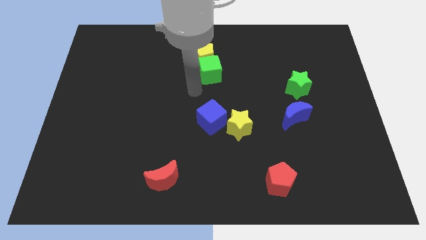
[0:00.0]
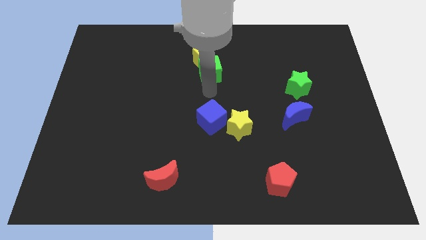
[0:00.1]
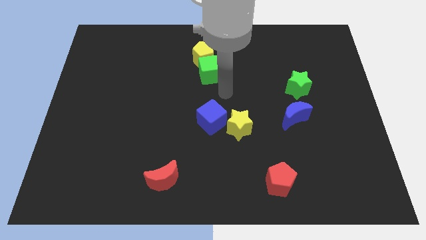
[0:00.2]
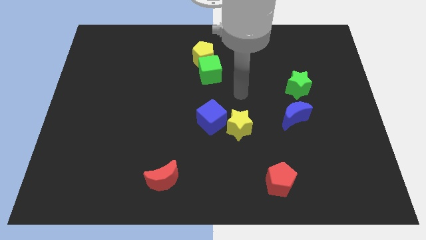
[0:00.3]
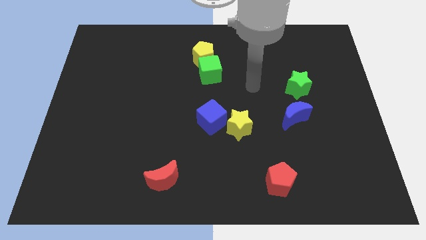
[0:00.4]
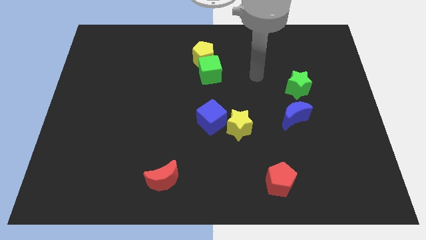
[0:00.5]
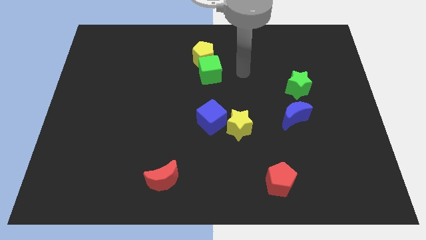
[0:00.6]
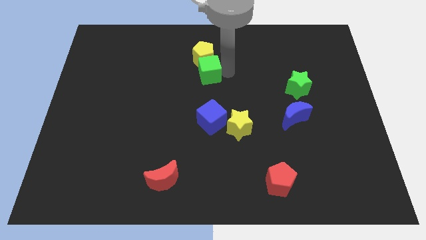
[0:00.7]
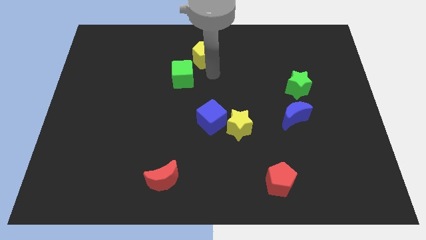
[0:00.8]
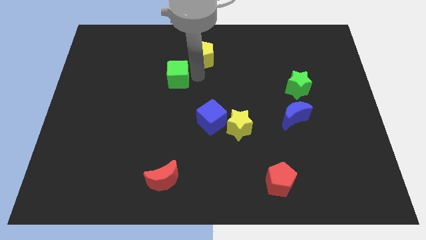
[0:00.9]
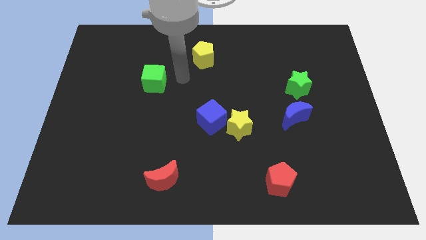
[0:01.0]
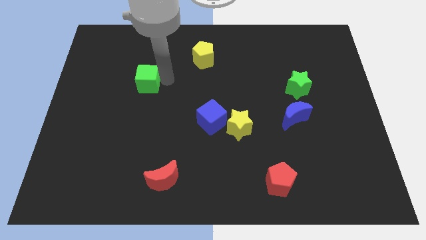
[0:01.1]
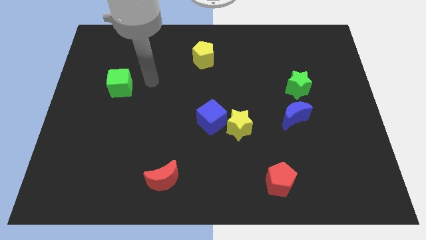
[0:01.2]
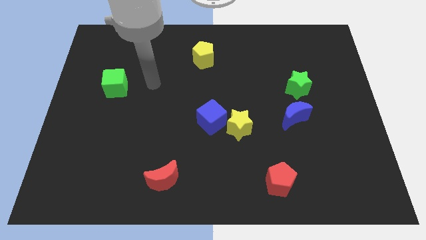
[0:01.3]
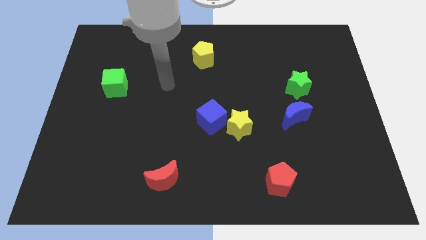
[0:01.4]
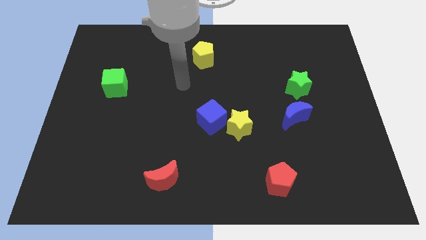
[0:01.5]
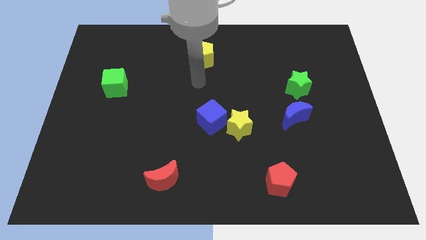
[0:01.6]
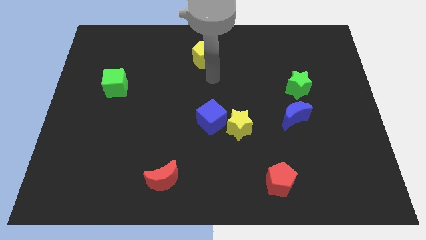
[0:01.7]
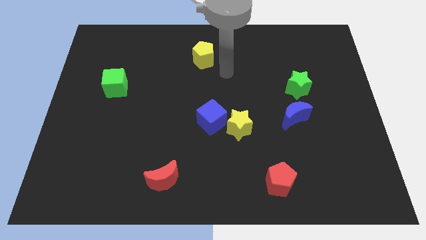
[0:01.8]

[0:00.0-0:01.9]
push the green cube towards the left center of the board

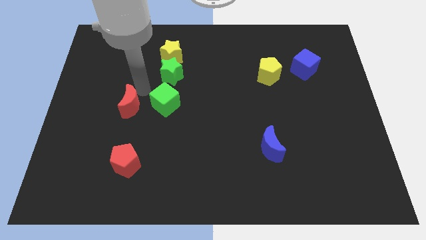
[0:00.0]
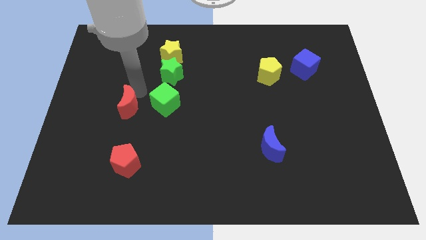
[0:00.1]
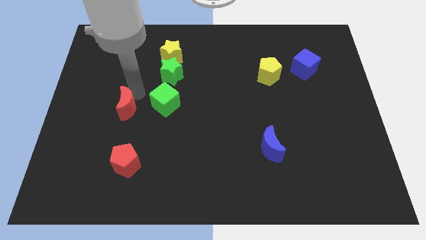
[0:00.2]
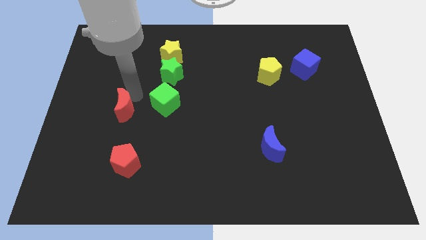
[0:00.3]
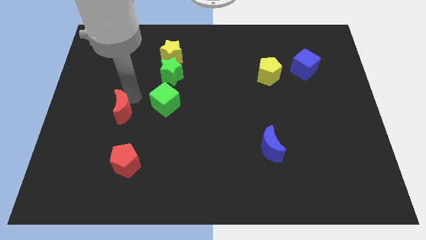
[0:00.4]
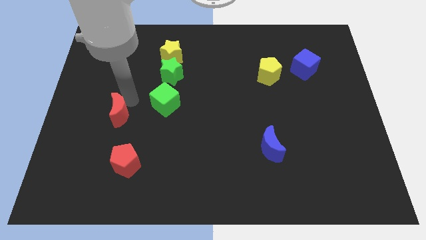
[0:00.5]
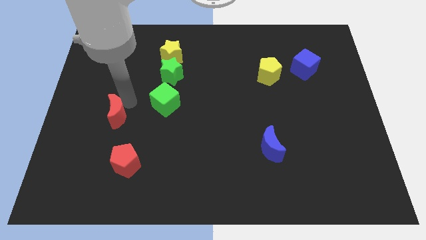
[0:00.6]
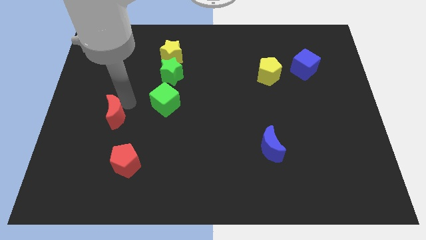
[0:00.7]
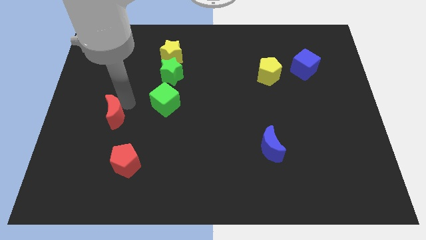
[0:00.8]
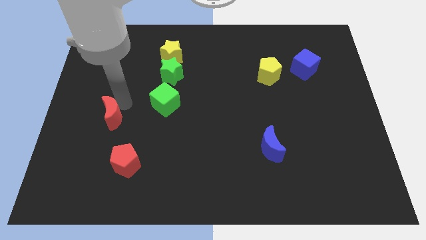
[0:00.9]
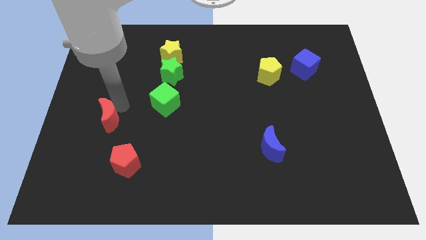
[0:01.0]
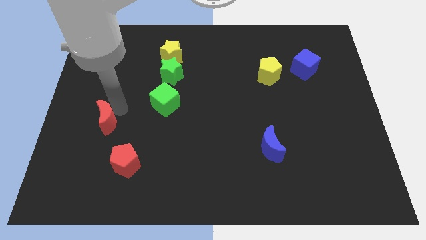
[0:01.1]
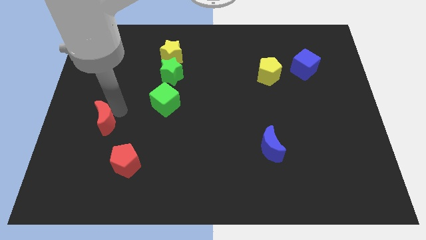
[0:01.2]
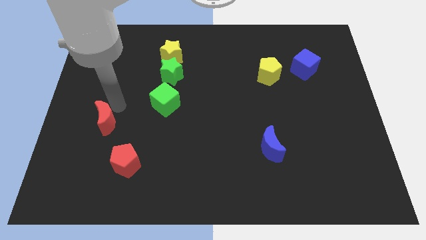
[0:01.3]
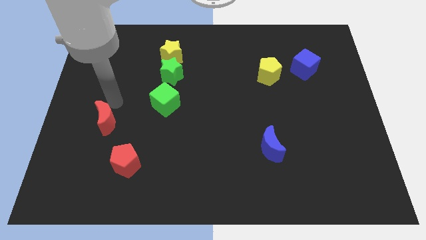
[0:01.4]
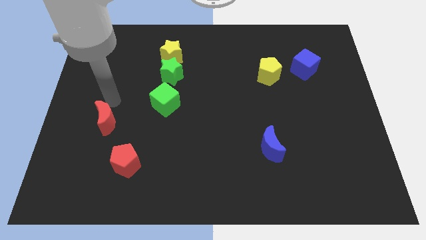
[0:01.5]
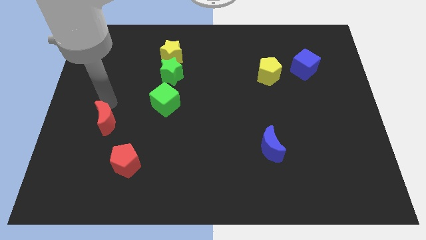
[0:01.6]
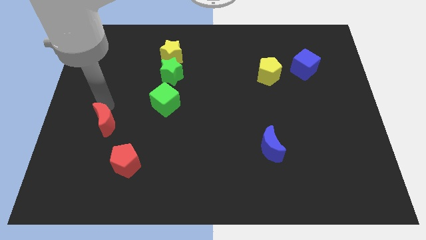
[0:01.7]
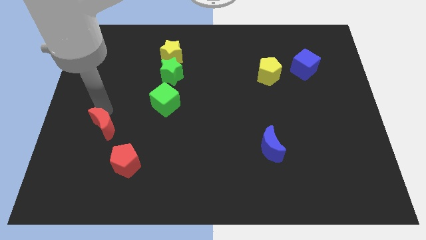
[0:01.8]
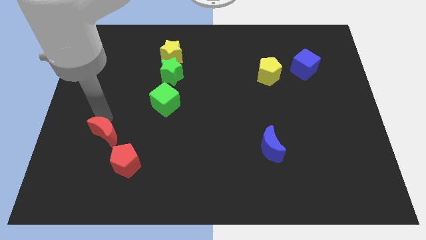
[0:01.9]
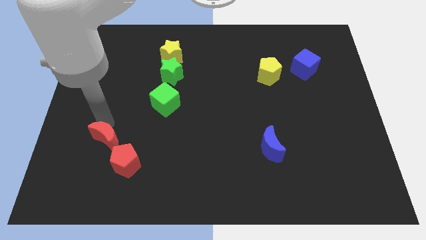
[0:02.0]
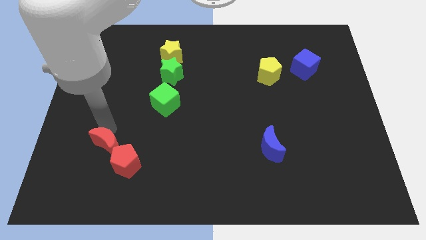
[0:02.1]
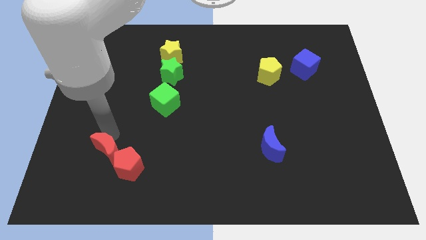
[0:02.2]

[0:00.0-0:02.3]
move the red crescent into the red pentagon

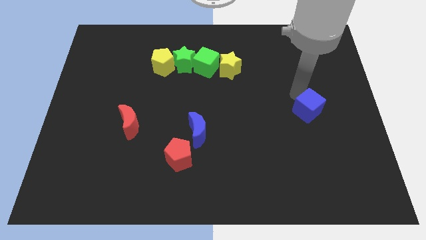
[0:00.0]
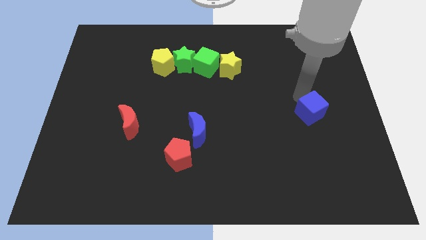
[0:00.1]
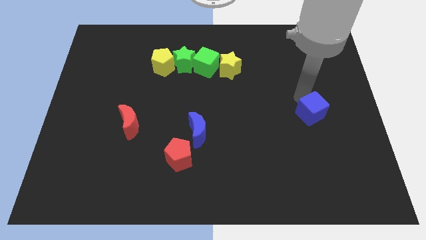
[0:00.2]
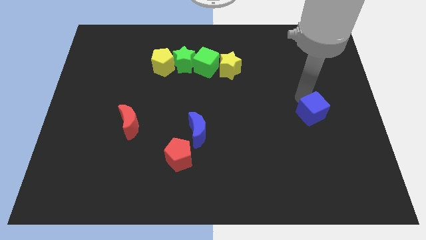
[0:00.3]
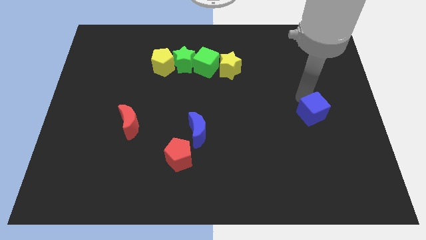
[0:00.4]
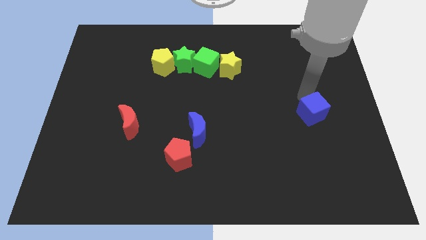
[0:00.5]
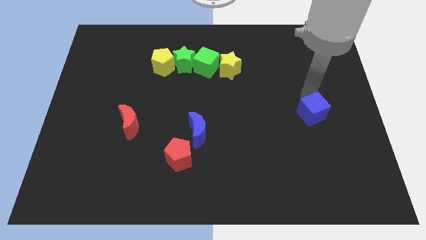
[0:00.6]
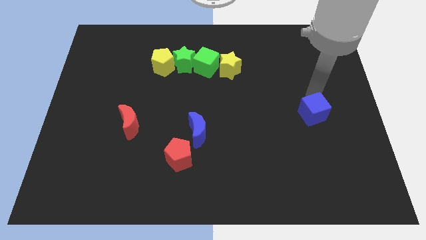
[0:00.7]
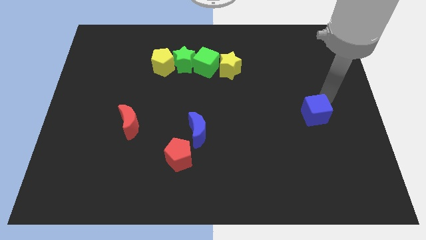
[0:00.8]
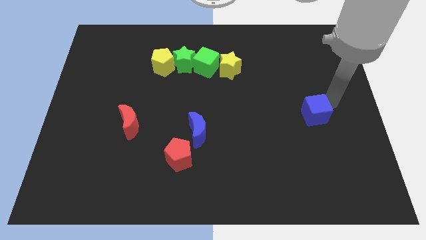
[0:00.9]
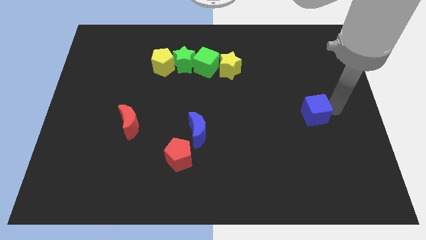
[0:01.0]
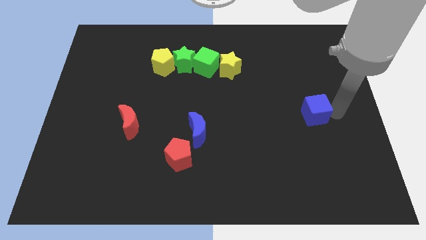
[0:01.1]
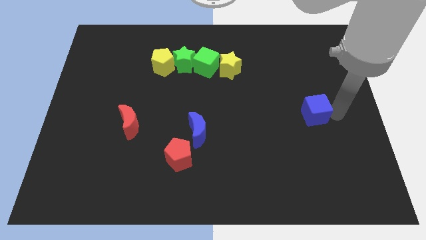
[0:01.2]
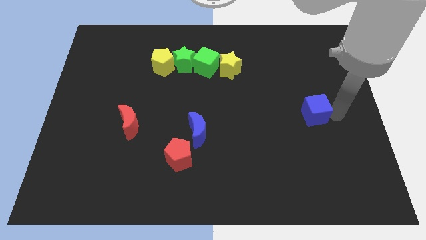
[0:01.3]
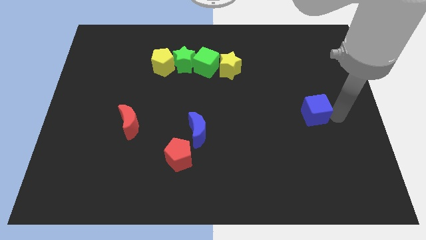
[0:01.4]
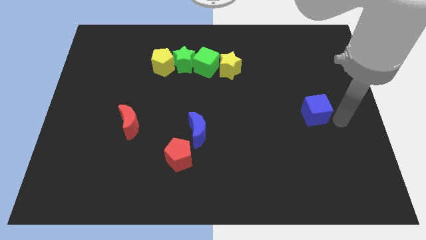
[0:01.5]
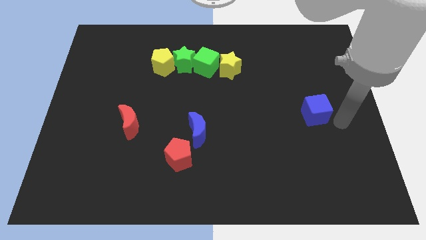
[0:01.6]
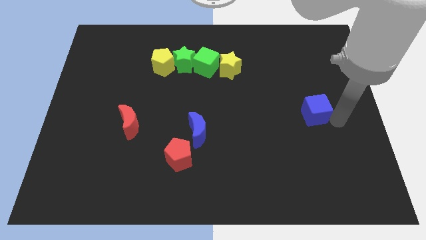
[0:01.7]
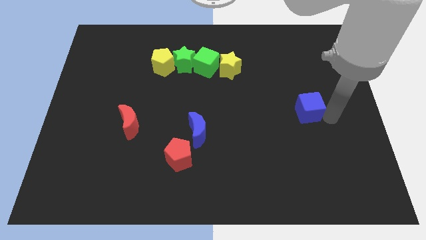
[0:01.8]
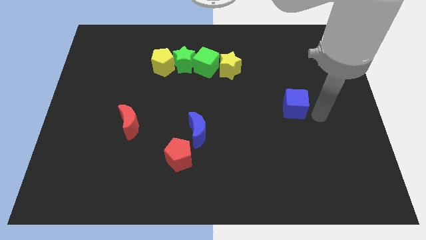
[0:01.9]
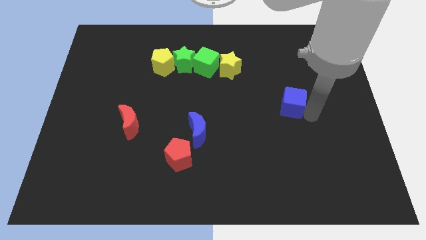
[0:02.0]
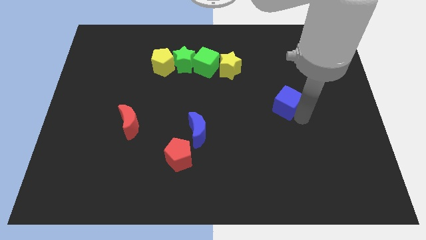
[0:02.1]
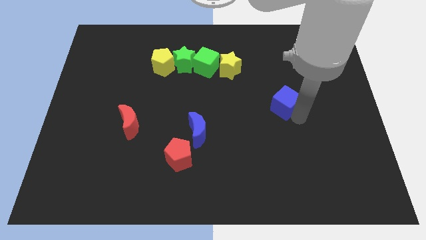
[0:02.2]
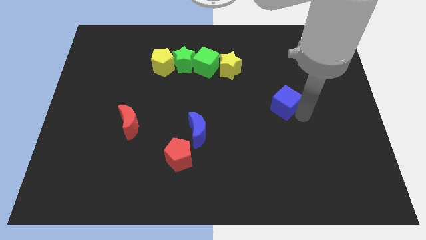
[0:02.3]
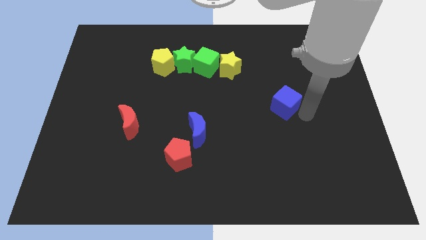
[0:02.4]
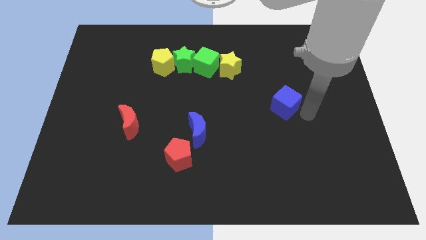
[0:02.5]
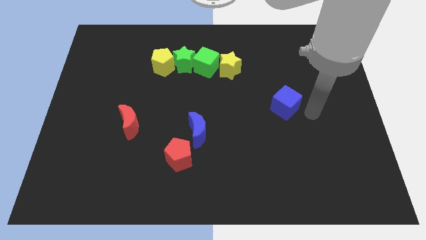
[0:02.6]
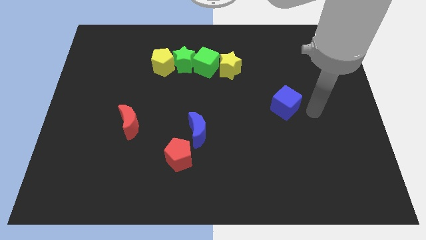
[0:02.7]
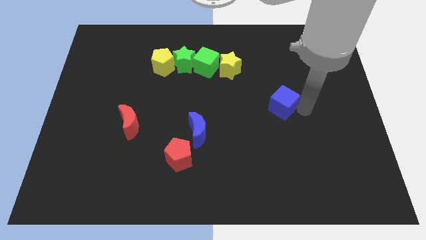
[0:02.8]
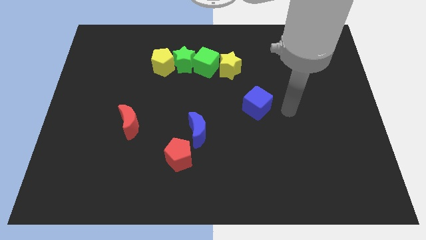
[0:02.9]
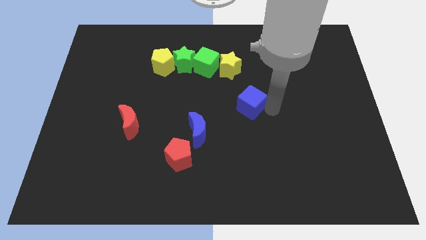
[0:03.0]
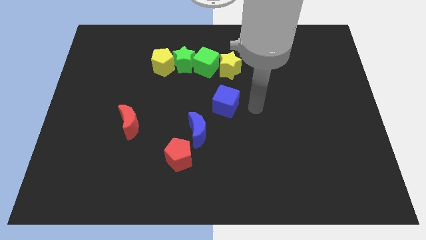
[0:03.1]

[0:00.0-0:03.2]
slide the blue cube towards the top side of the blue crescent

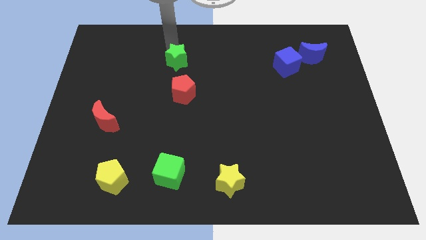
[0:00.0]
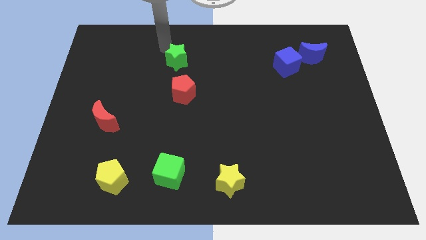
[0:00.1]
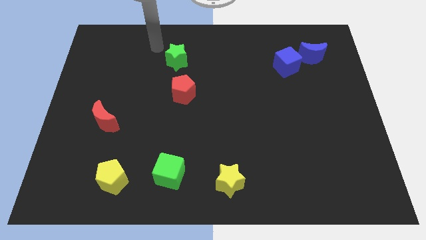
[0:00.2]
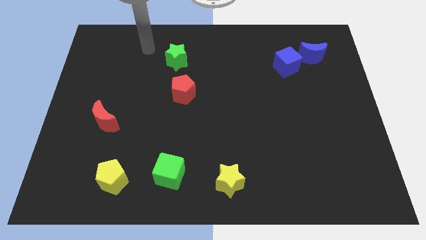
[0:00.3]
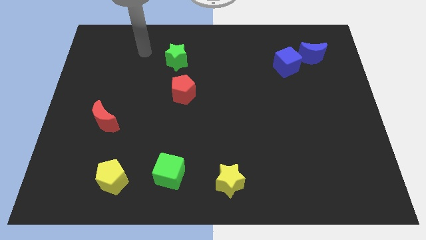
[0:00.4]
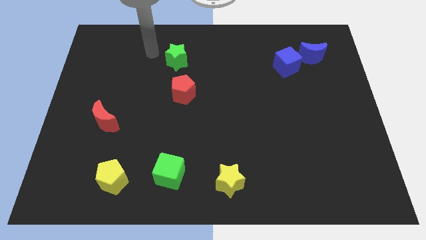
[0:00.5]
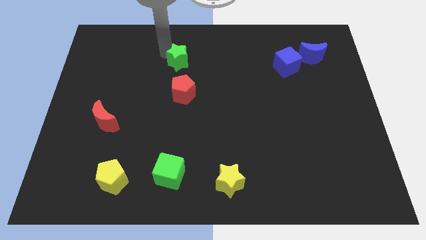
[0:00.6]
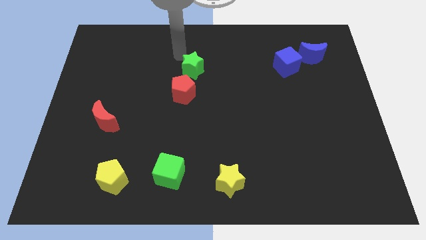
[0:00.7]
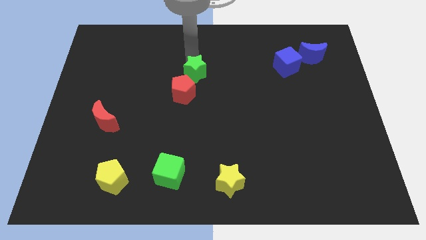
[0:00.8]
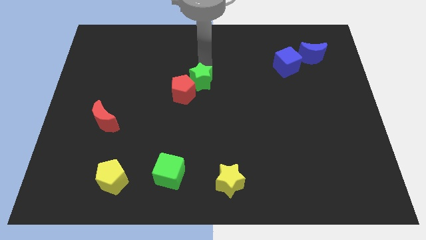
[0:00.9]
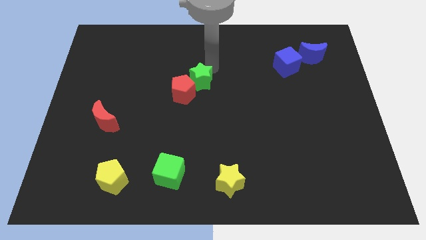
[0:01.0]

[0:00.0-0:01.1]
slide green star into red pentagon

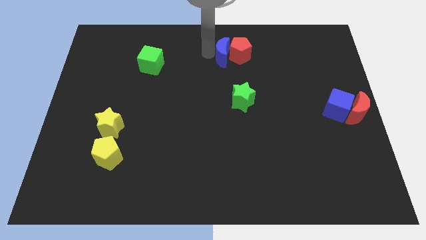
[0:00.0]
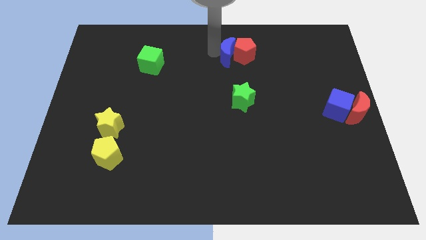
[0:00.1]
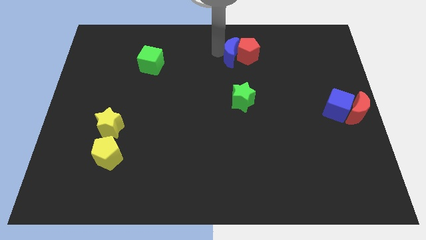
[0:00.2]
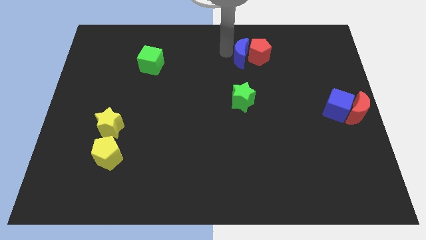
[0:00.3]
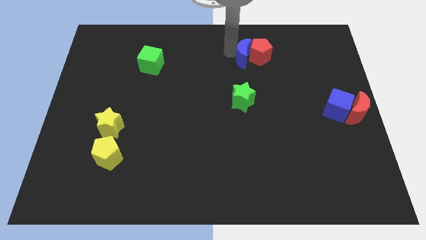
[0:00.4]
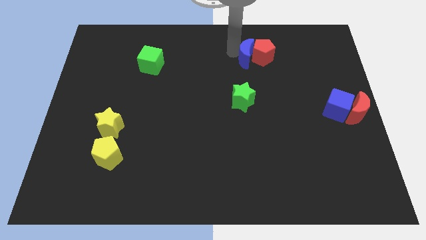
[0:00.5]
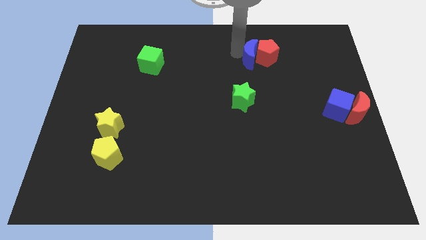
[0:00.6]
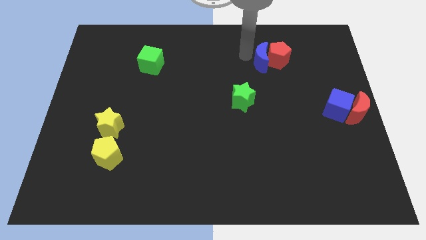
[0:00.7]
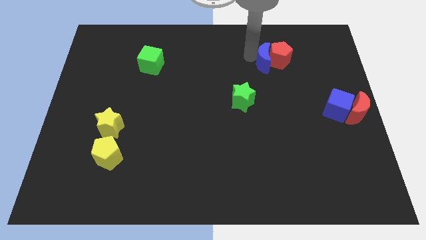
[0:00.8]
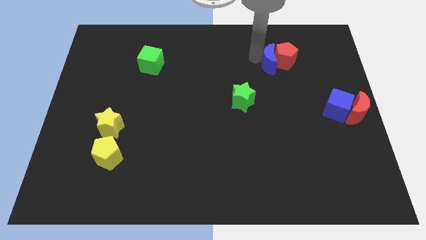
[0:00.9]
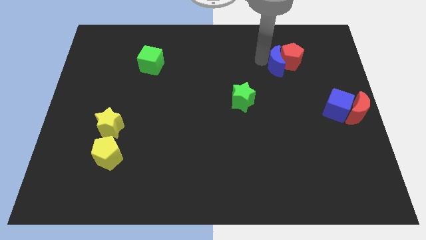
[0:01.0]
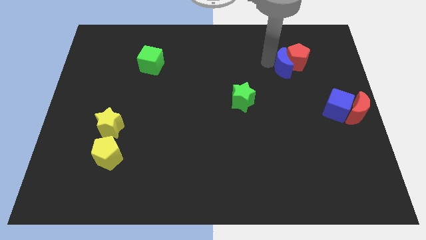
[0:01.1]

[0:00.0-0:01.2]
move red moon and the red pentagon top right to the green star
